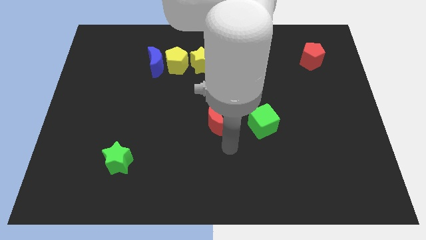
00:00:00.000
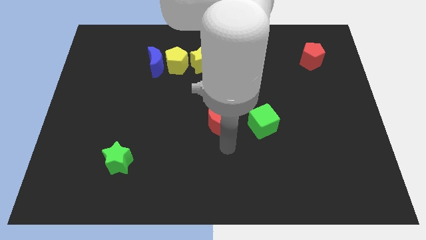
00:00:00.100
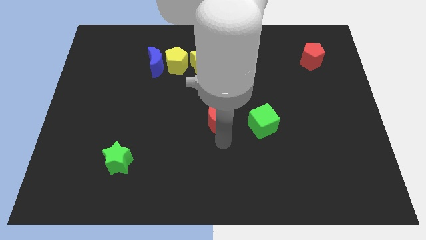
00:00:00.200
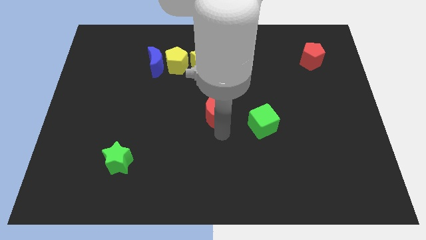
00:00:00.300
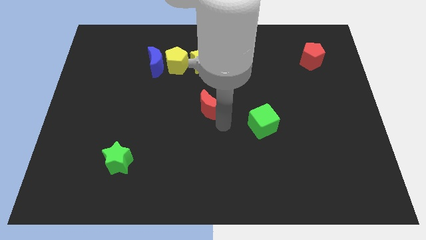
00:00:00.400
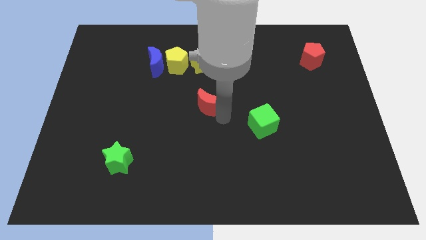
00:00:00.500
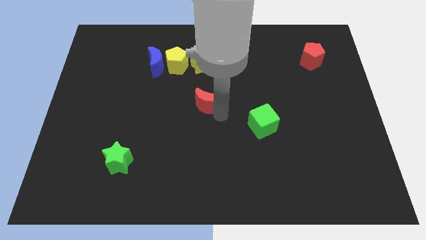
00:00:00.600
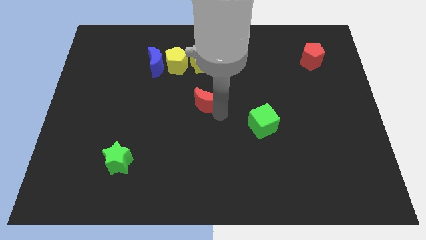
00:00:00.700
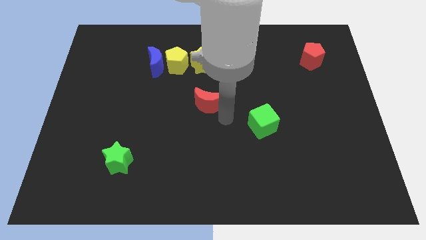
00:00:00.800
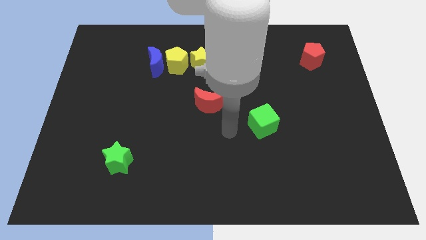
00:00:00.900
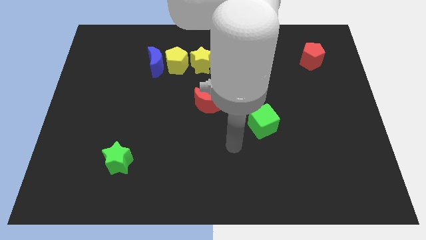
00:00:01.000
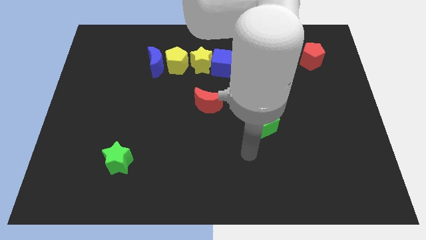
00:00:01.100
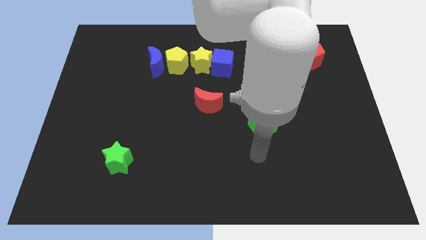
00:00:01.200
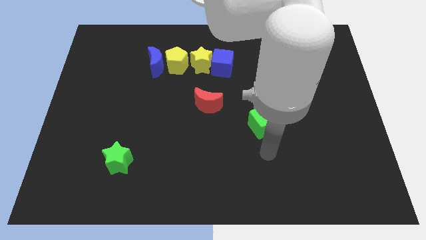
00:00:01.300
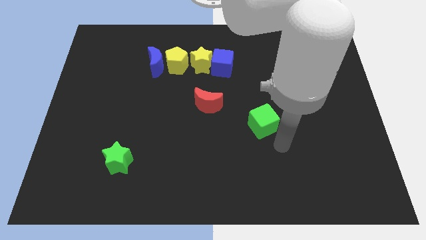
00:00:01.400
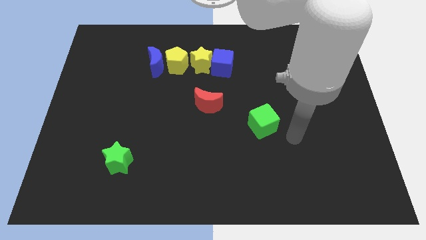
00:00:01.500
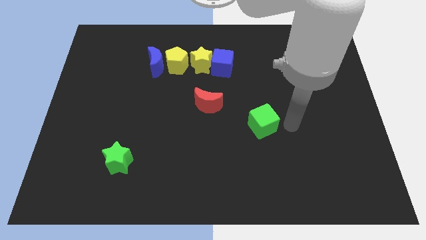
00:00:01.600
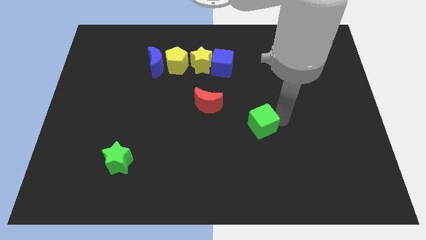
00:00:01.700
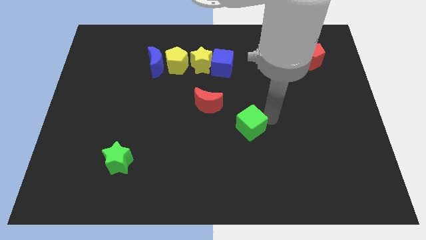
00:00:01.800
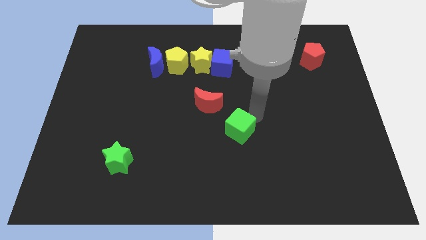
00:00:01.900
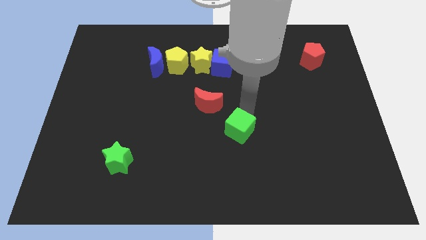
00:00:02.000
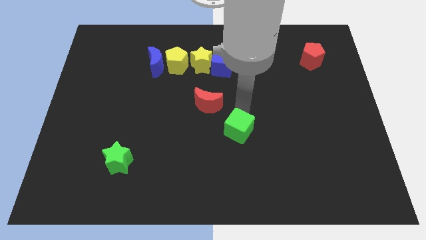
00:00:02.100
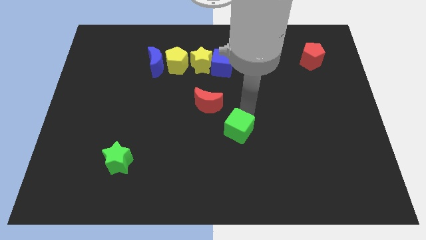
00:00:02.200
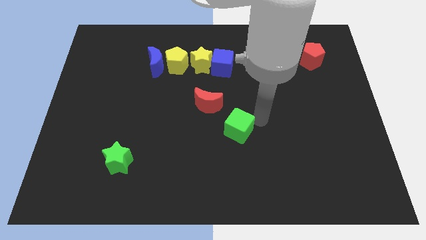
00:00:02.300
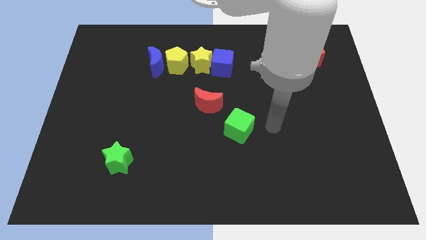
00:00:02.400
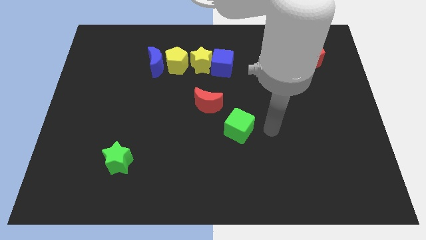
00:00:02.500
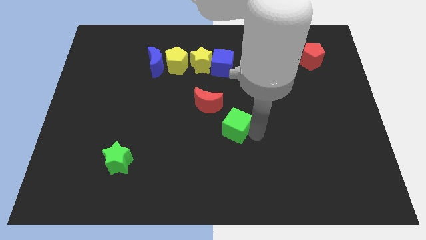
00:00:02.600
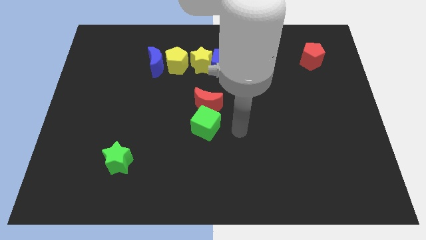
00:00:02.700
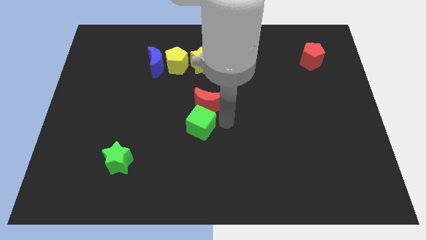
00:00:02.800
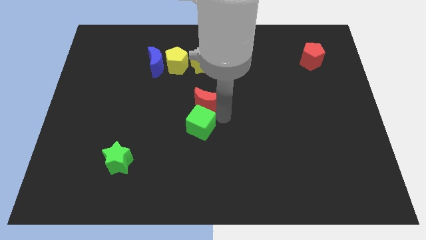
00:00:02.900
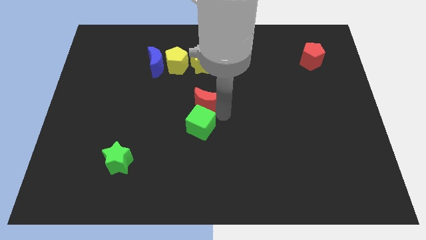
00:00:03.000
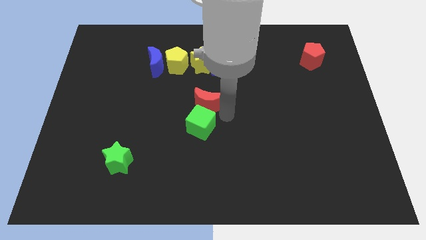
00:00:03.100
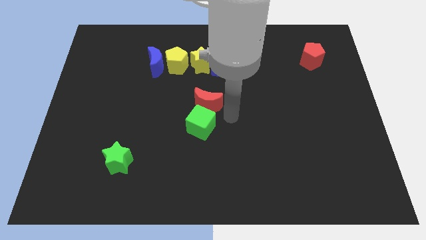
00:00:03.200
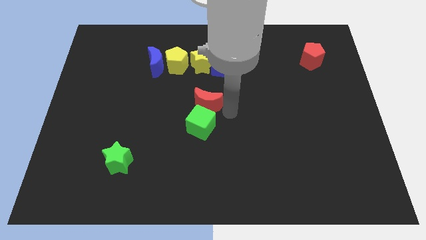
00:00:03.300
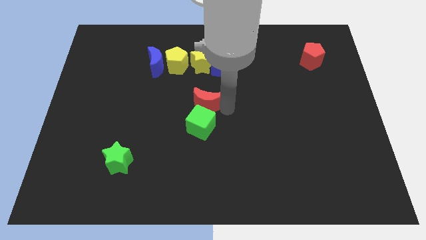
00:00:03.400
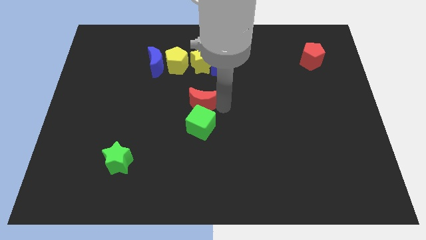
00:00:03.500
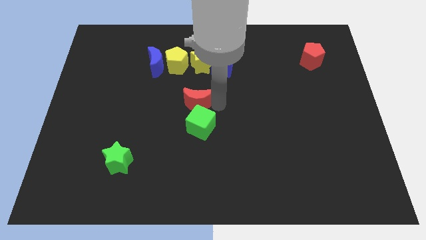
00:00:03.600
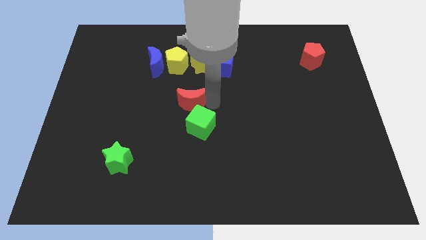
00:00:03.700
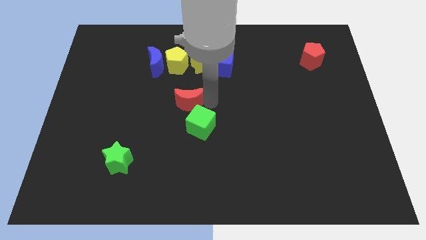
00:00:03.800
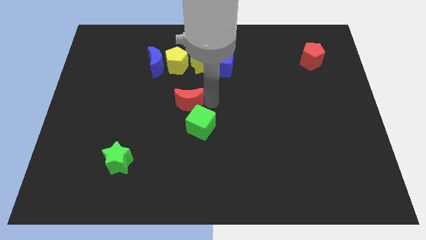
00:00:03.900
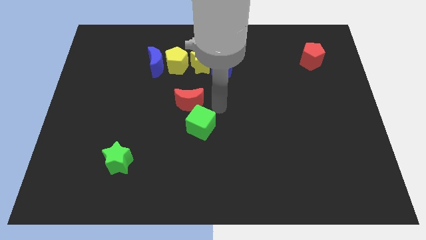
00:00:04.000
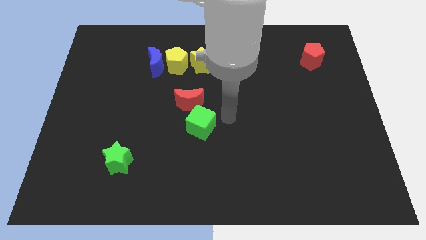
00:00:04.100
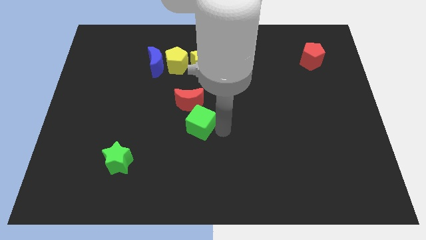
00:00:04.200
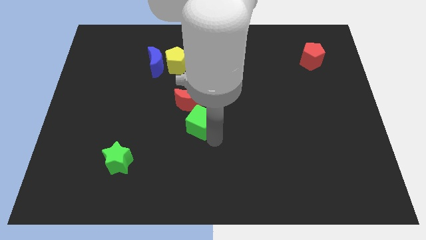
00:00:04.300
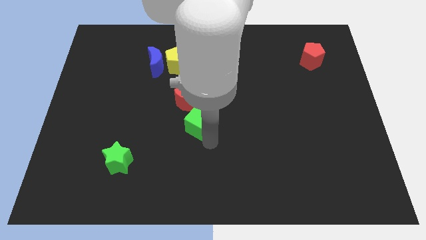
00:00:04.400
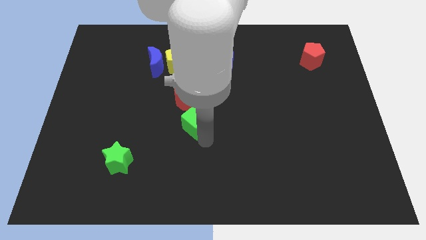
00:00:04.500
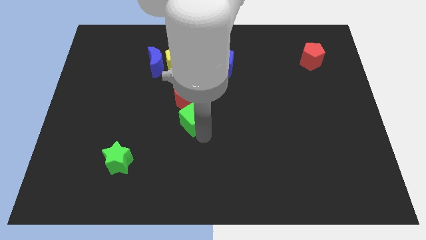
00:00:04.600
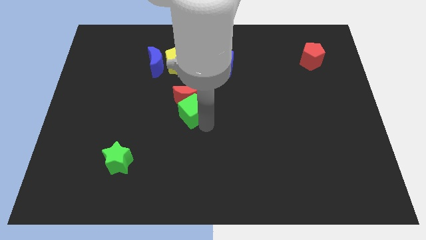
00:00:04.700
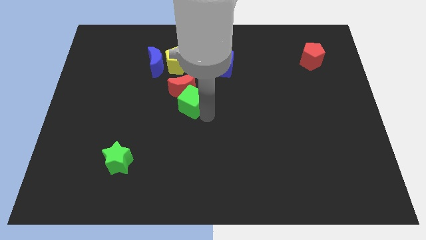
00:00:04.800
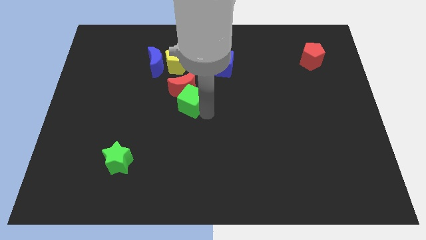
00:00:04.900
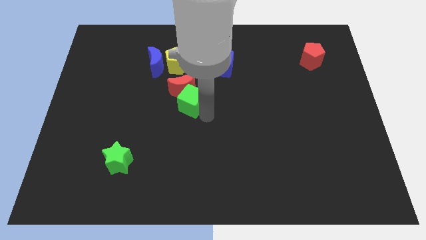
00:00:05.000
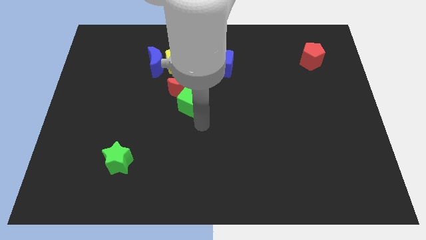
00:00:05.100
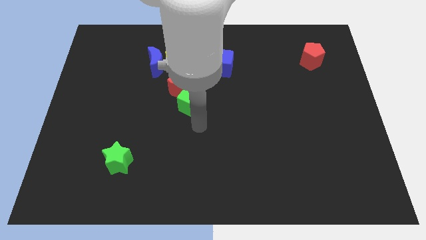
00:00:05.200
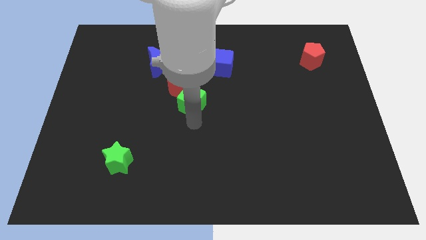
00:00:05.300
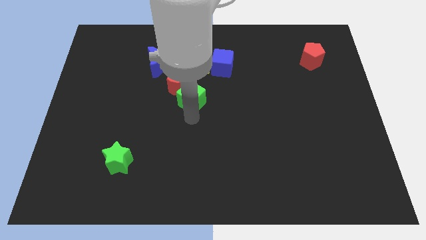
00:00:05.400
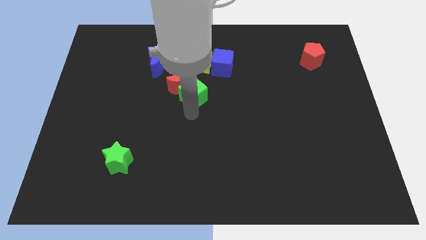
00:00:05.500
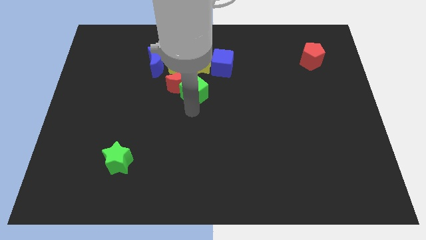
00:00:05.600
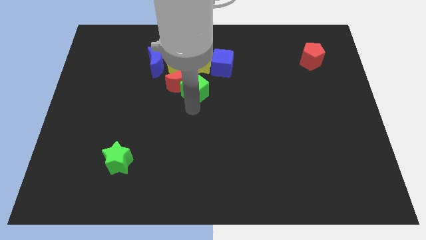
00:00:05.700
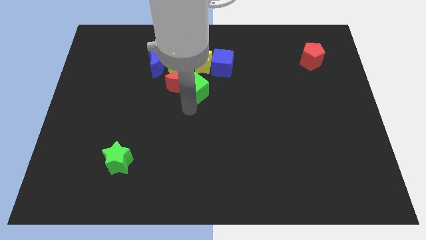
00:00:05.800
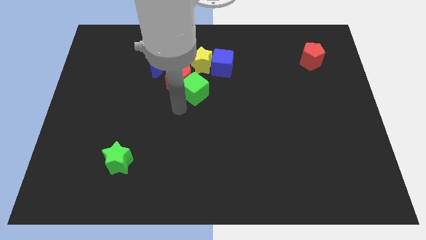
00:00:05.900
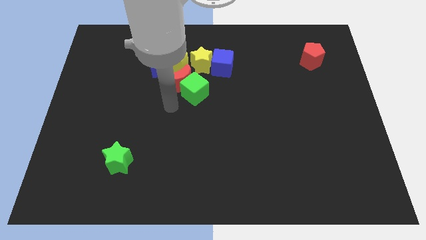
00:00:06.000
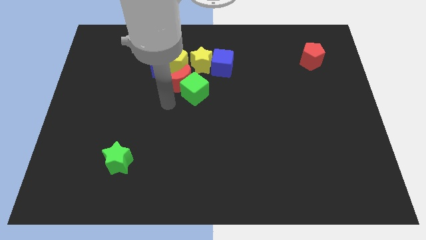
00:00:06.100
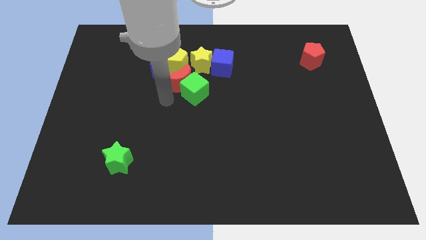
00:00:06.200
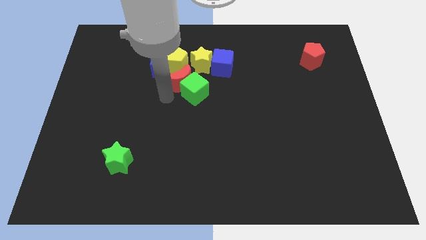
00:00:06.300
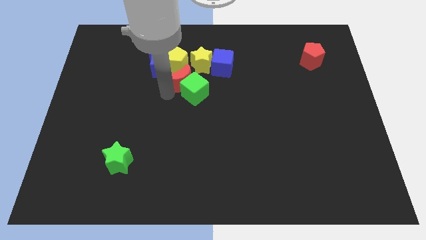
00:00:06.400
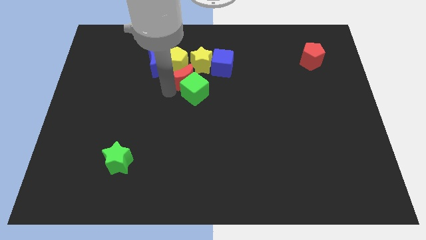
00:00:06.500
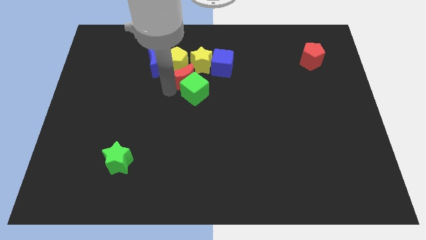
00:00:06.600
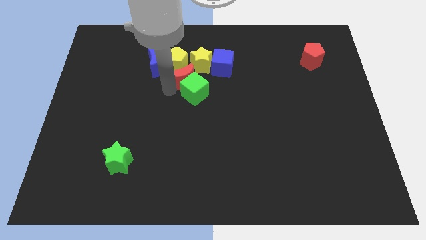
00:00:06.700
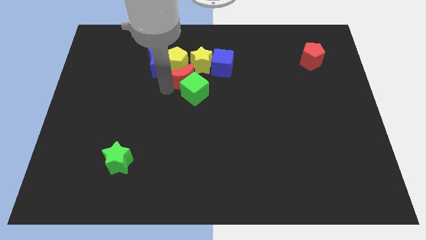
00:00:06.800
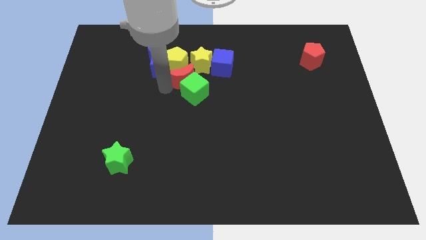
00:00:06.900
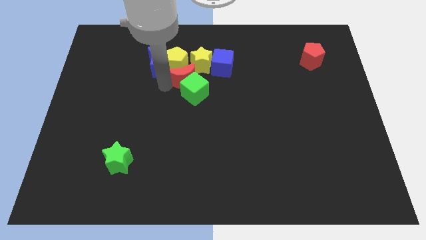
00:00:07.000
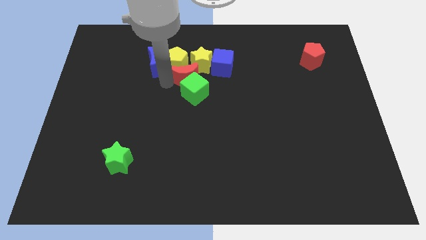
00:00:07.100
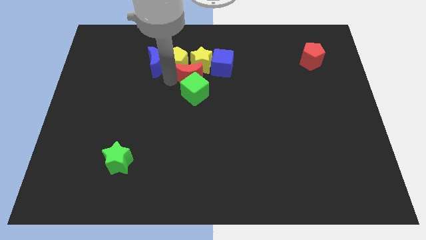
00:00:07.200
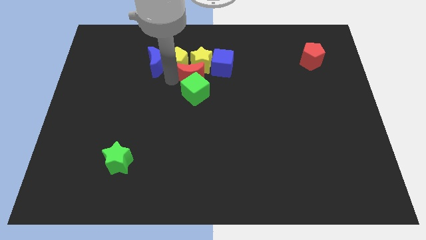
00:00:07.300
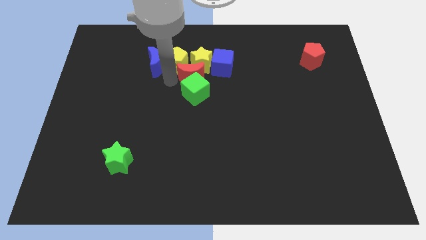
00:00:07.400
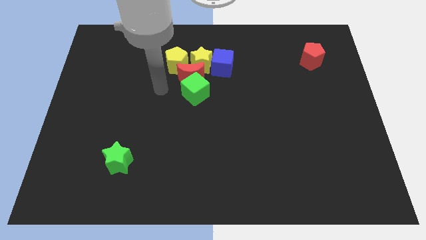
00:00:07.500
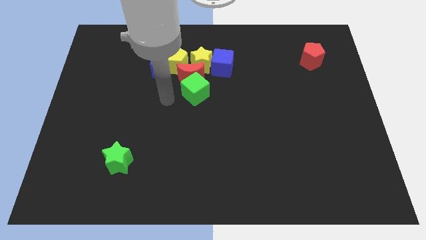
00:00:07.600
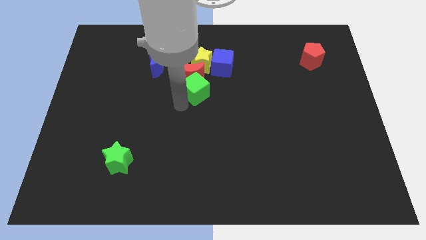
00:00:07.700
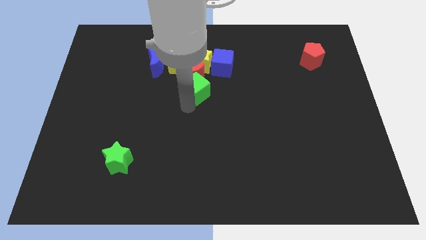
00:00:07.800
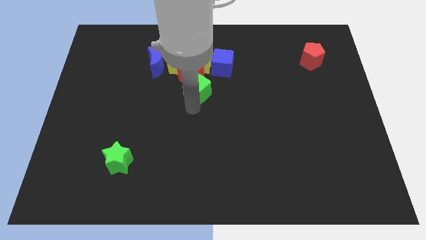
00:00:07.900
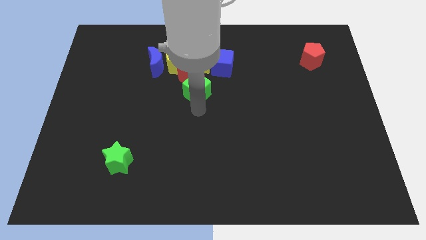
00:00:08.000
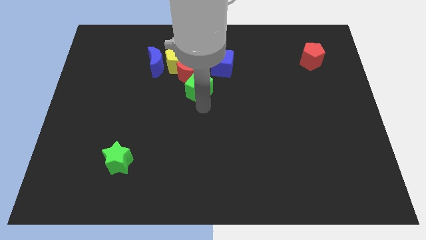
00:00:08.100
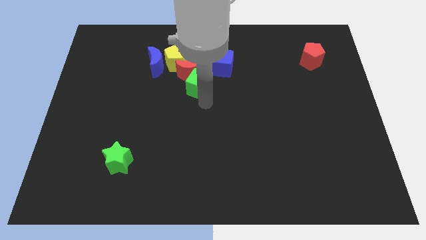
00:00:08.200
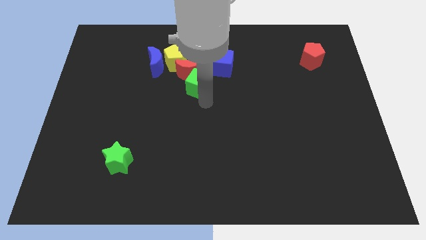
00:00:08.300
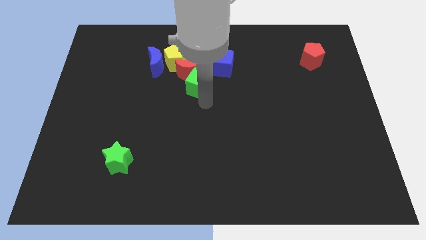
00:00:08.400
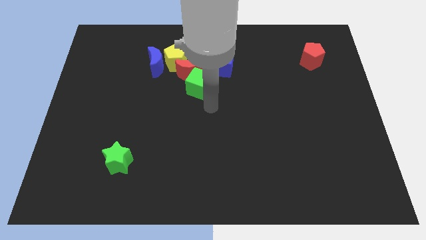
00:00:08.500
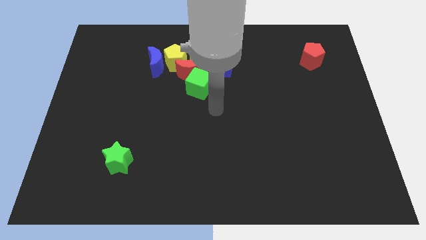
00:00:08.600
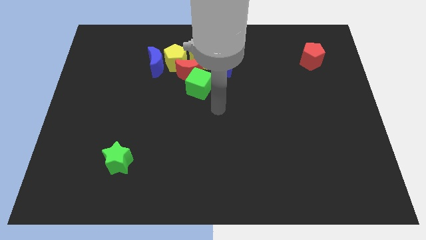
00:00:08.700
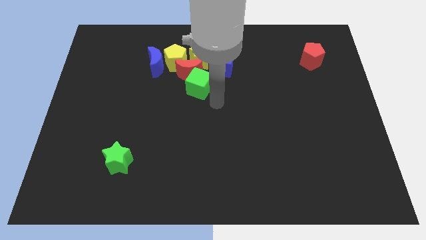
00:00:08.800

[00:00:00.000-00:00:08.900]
place the red crescent and green cube below yellow blocks
